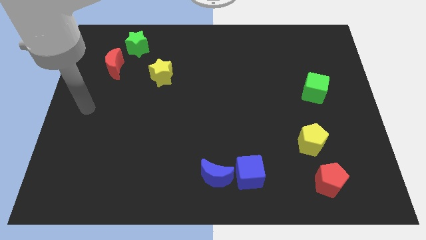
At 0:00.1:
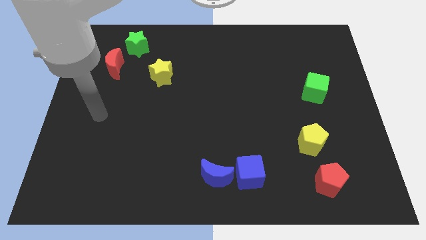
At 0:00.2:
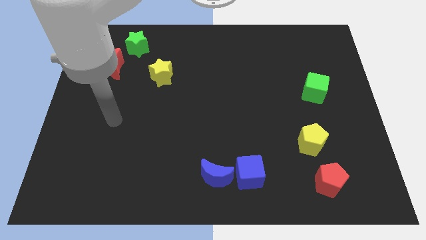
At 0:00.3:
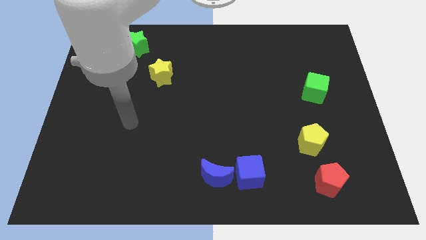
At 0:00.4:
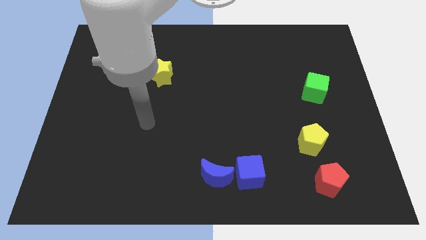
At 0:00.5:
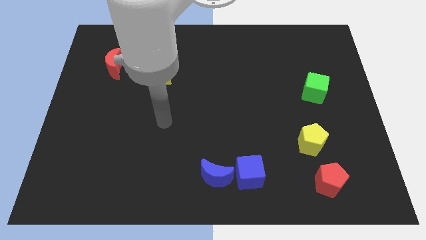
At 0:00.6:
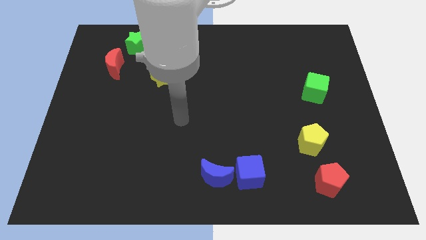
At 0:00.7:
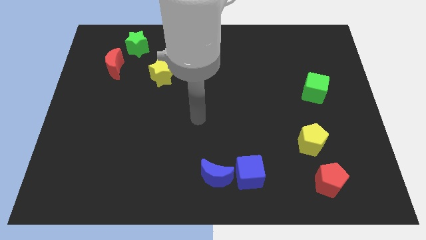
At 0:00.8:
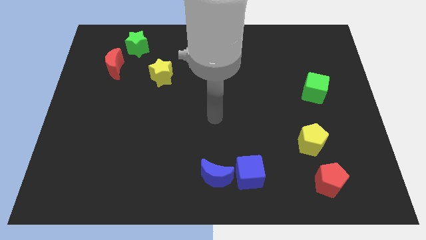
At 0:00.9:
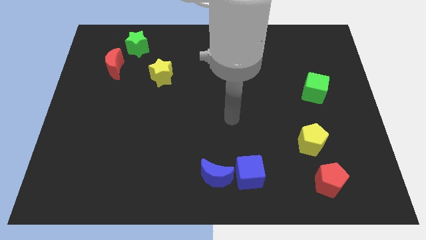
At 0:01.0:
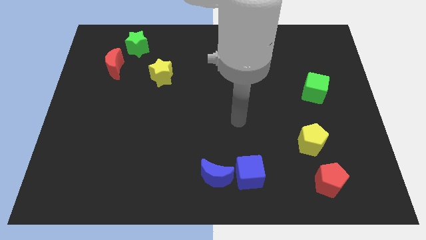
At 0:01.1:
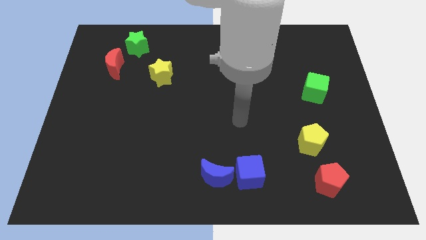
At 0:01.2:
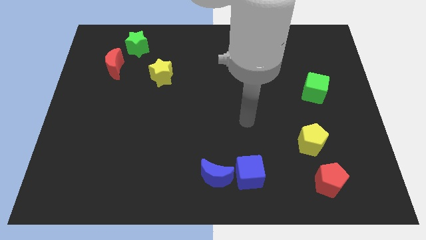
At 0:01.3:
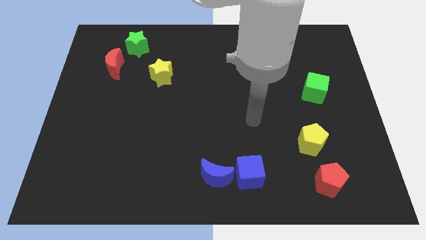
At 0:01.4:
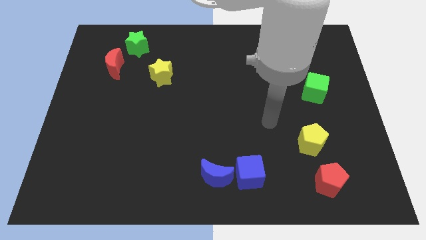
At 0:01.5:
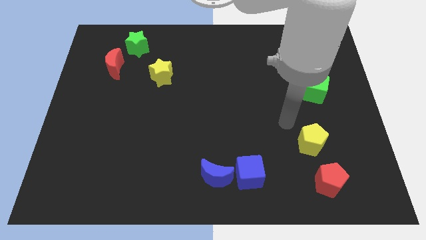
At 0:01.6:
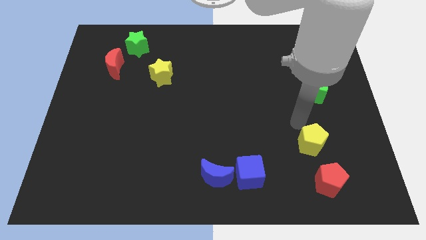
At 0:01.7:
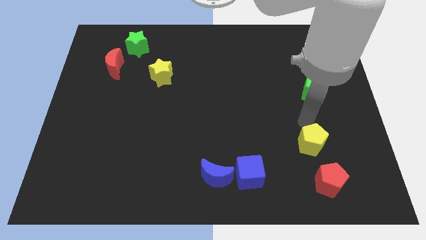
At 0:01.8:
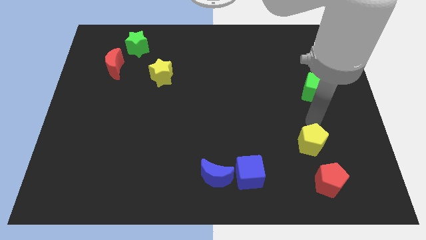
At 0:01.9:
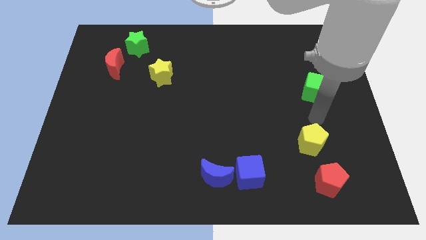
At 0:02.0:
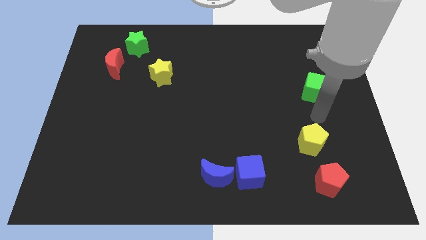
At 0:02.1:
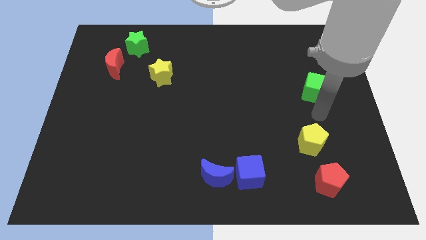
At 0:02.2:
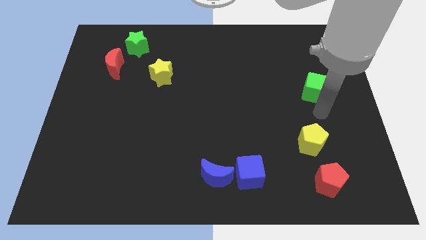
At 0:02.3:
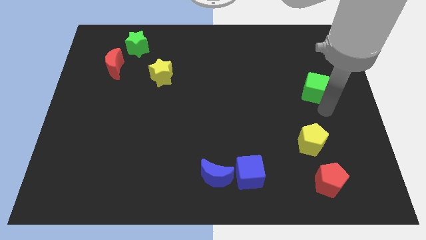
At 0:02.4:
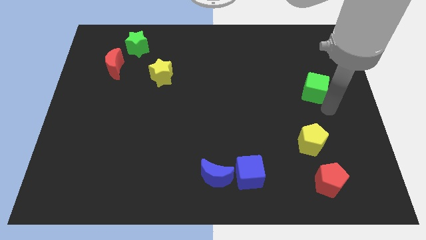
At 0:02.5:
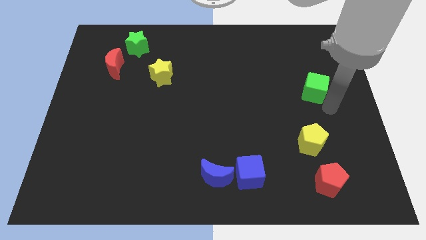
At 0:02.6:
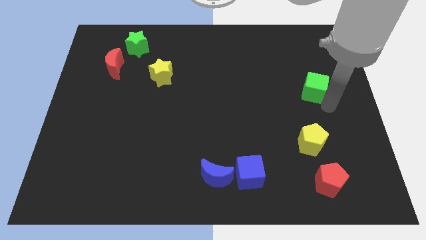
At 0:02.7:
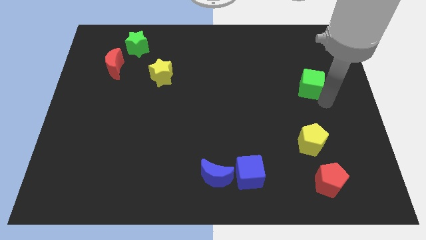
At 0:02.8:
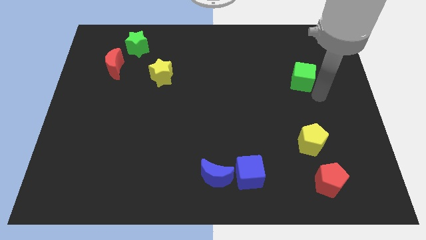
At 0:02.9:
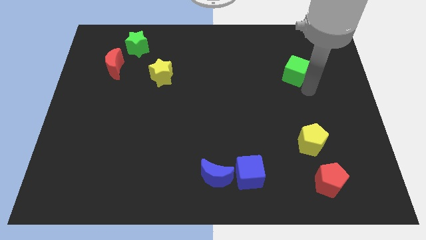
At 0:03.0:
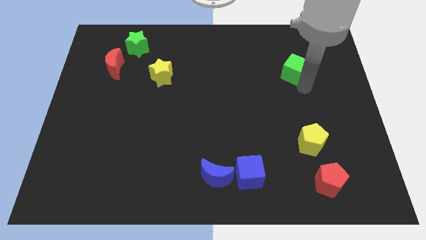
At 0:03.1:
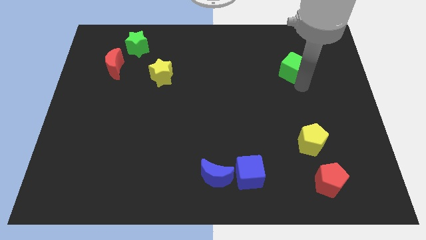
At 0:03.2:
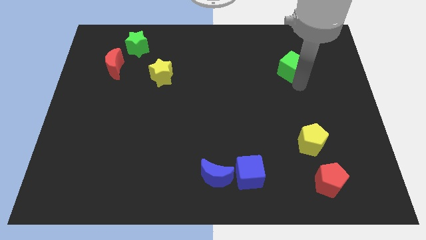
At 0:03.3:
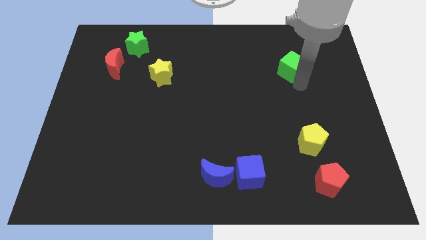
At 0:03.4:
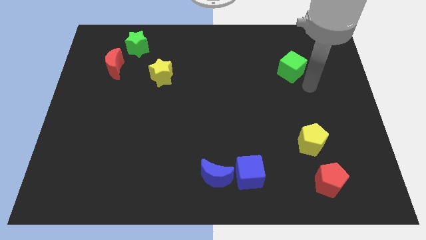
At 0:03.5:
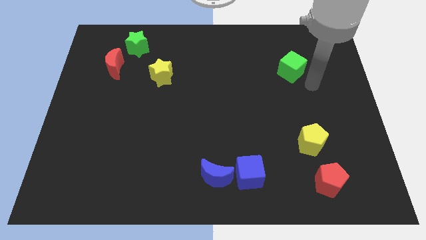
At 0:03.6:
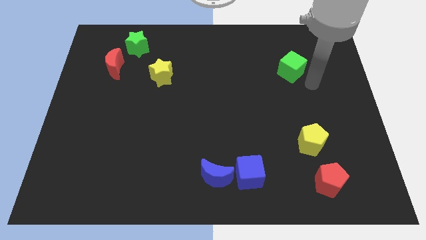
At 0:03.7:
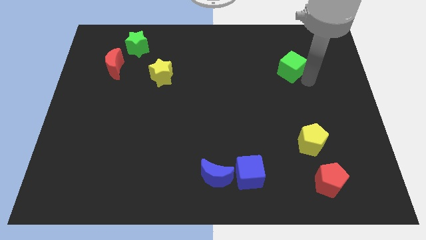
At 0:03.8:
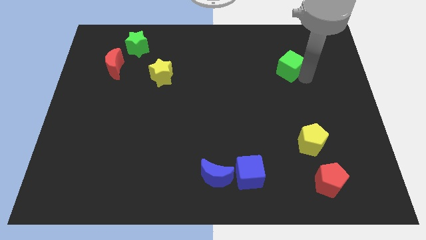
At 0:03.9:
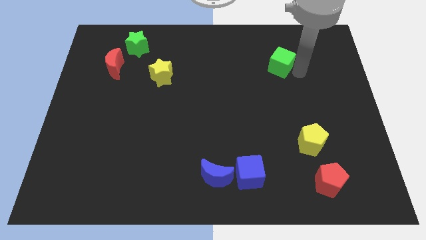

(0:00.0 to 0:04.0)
move the green cube to the top of the board

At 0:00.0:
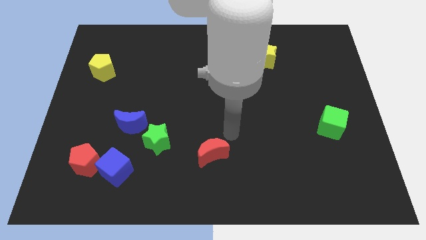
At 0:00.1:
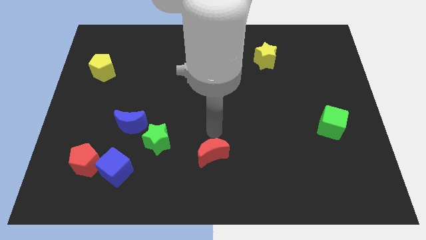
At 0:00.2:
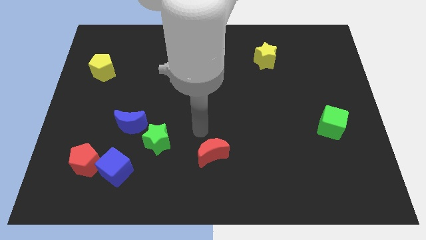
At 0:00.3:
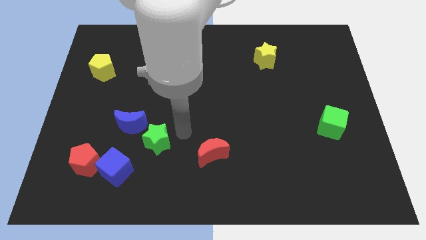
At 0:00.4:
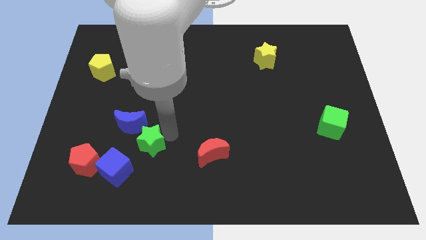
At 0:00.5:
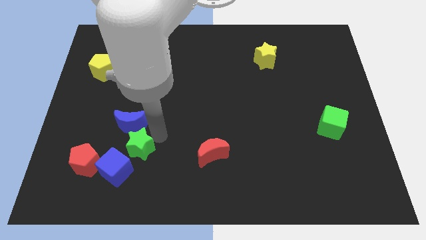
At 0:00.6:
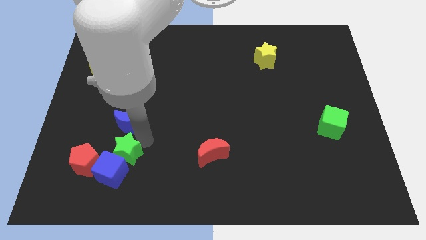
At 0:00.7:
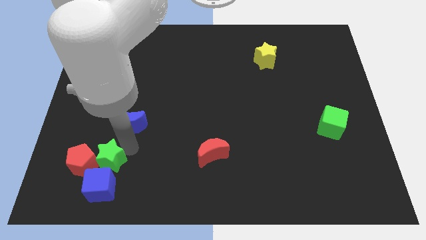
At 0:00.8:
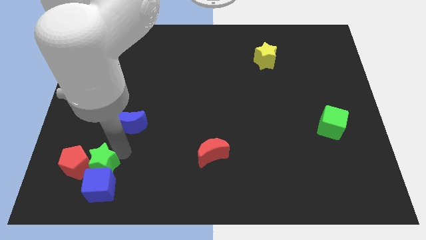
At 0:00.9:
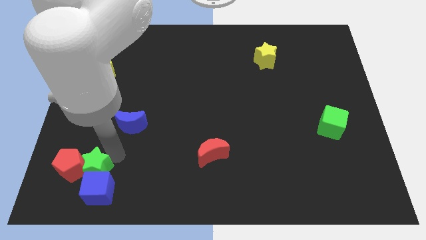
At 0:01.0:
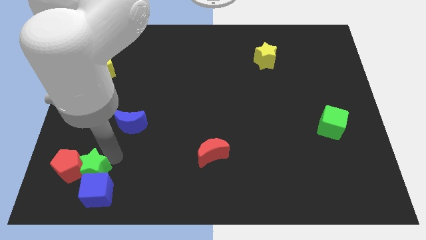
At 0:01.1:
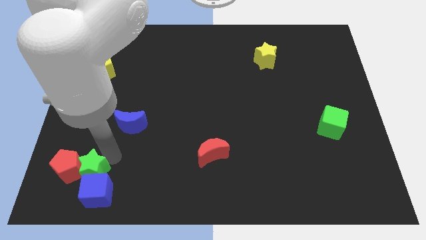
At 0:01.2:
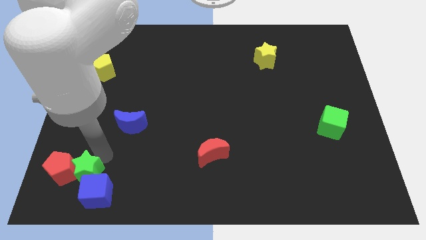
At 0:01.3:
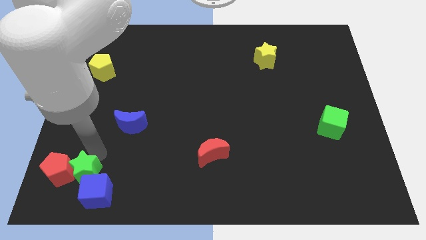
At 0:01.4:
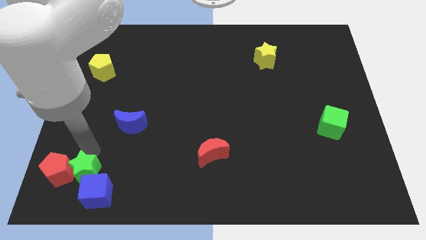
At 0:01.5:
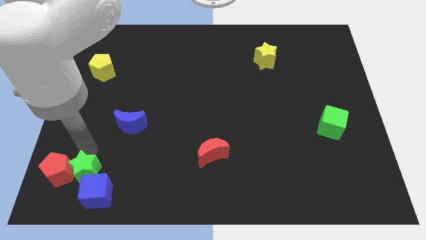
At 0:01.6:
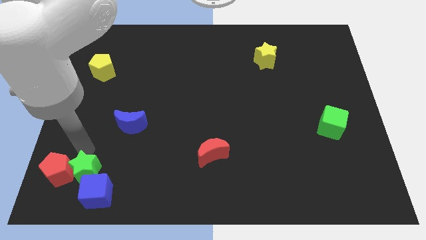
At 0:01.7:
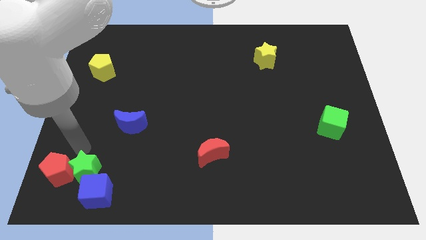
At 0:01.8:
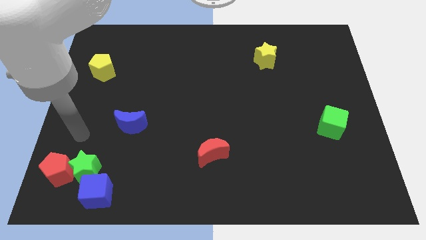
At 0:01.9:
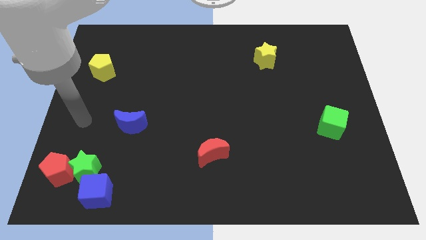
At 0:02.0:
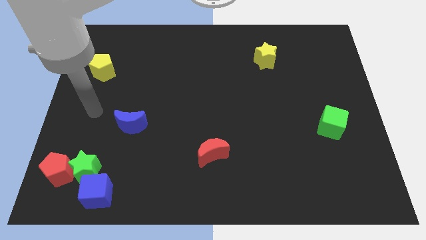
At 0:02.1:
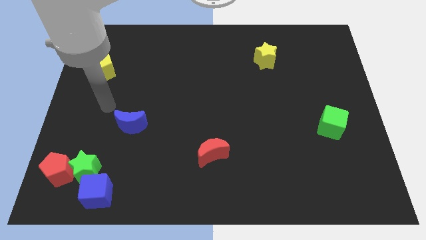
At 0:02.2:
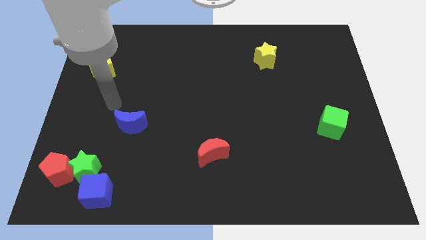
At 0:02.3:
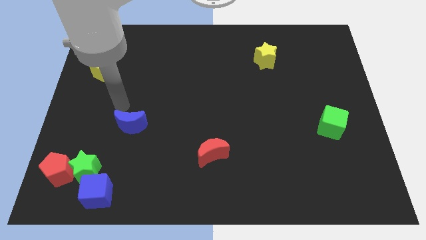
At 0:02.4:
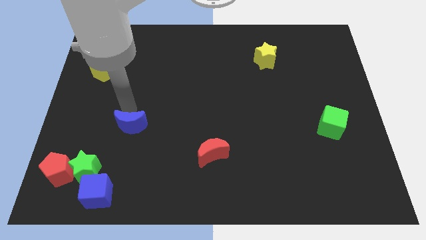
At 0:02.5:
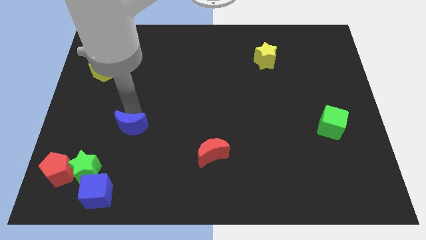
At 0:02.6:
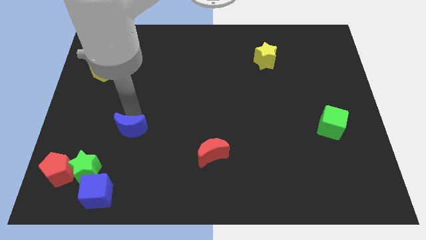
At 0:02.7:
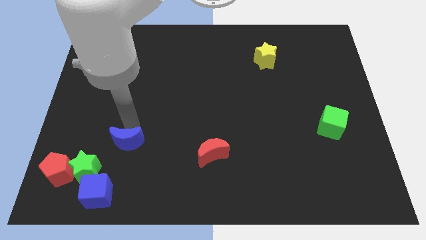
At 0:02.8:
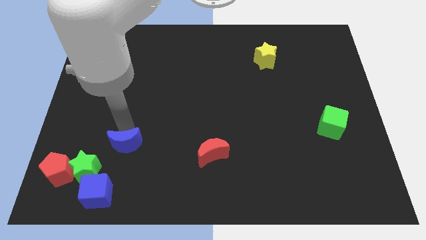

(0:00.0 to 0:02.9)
place the blue moon diagonally top right to the green star

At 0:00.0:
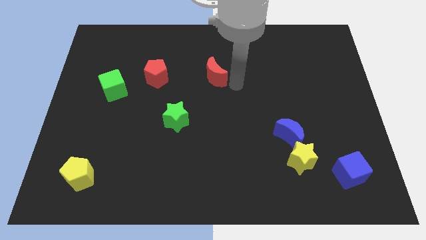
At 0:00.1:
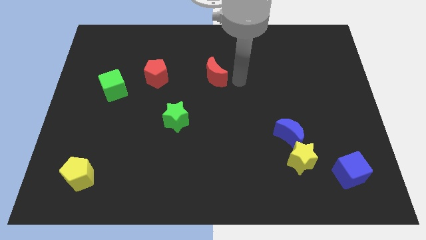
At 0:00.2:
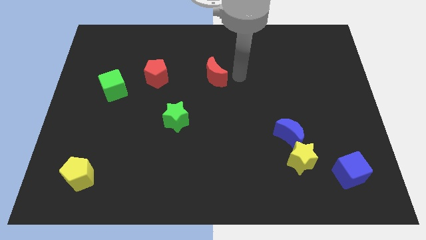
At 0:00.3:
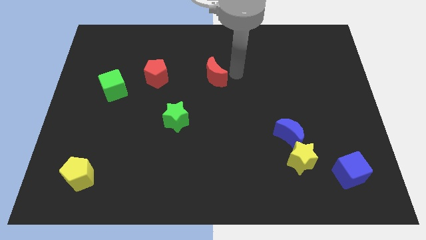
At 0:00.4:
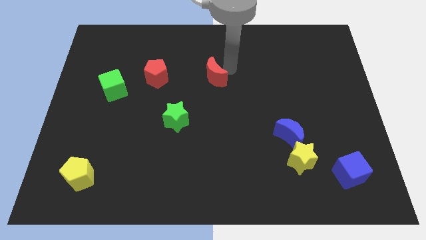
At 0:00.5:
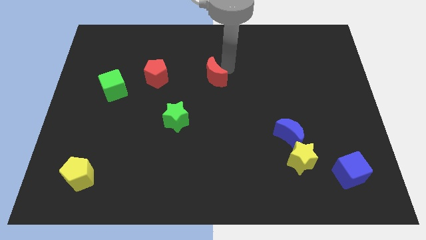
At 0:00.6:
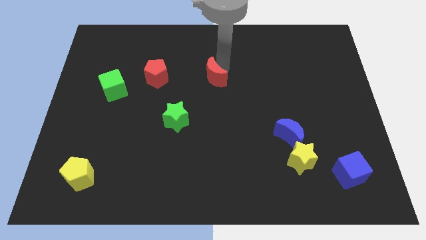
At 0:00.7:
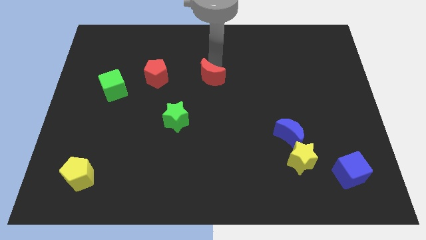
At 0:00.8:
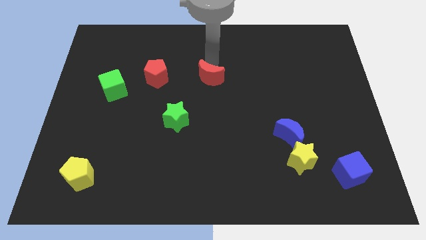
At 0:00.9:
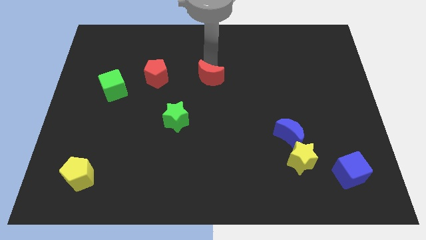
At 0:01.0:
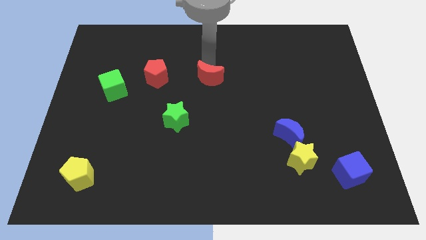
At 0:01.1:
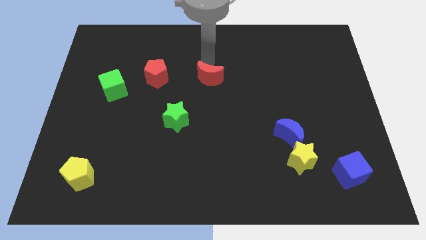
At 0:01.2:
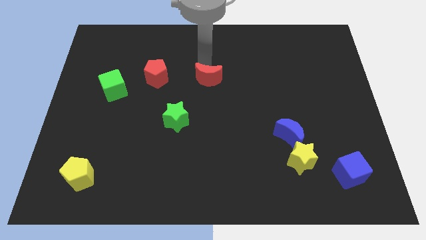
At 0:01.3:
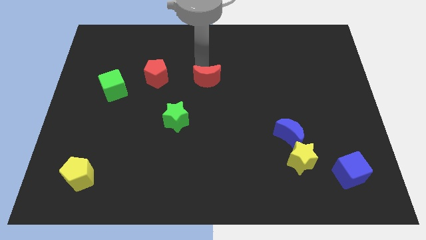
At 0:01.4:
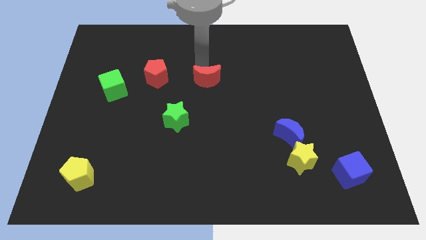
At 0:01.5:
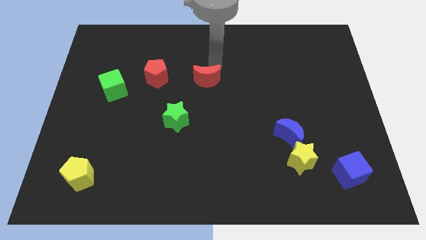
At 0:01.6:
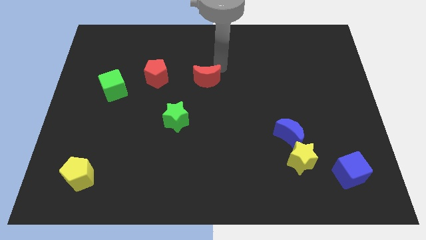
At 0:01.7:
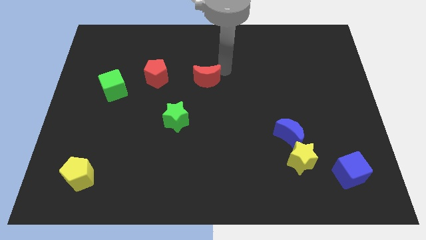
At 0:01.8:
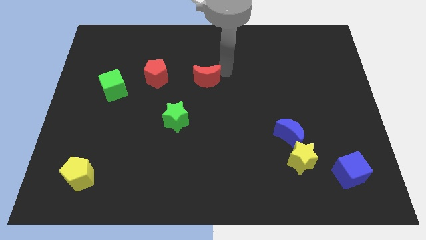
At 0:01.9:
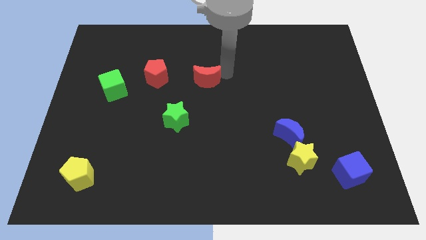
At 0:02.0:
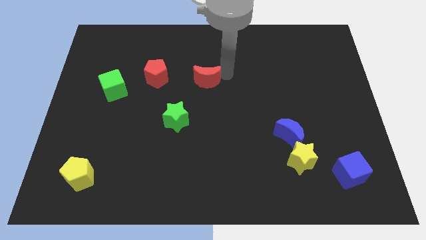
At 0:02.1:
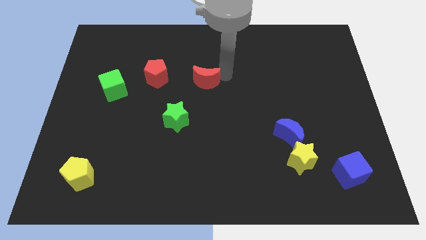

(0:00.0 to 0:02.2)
slightly move the red moon towards left
